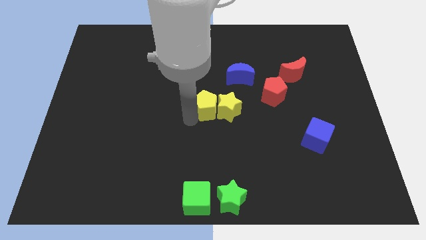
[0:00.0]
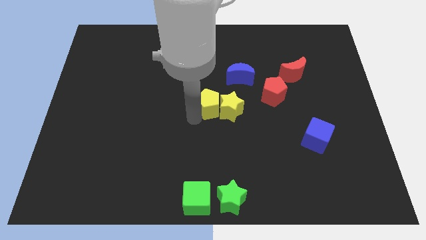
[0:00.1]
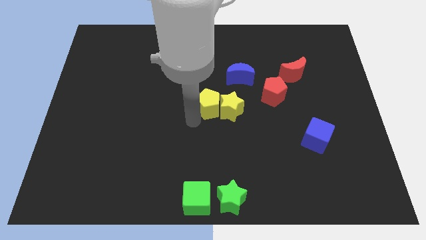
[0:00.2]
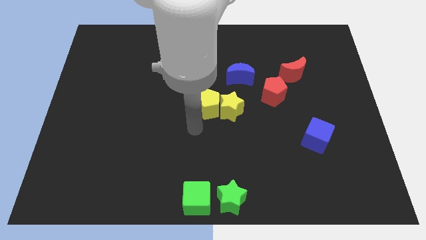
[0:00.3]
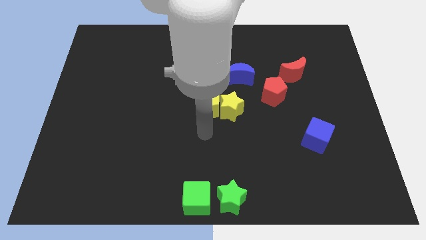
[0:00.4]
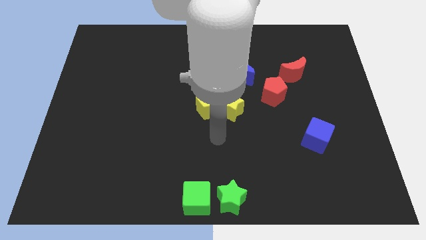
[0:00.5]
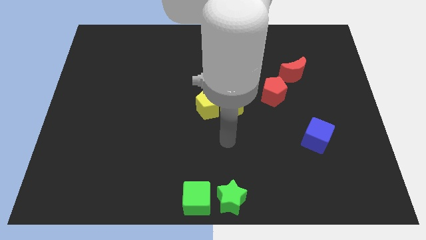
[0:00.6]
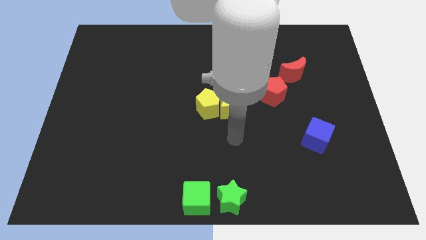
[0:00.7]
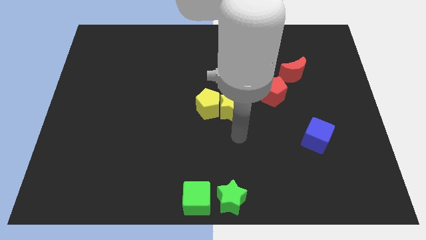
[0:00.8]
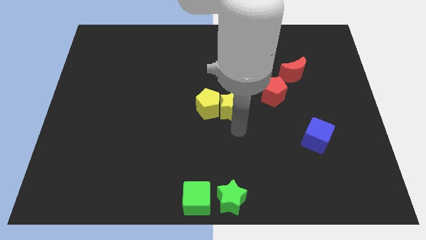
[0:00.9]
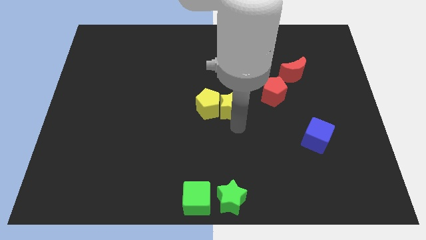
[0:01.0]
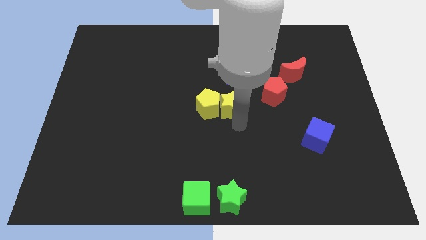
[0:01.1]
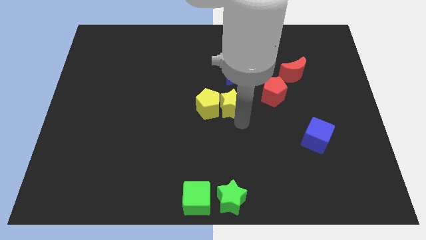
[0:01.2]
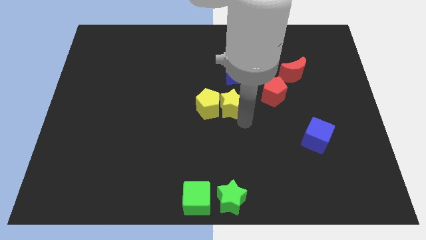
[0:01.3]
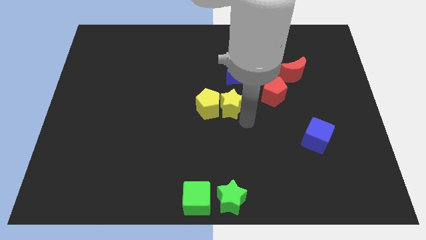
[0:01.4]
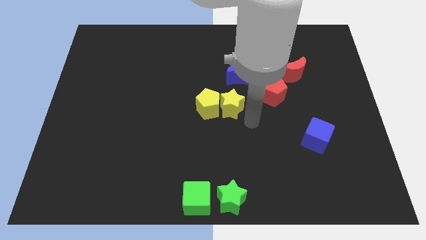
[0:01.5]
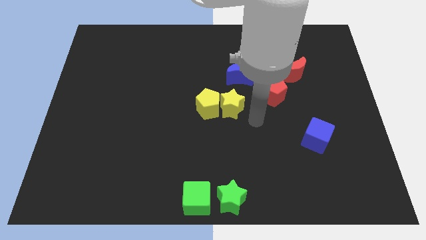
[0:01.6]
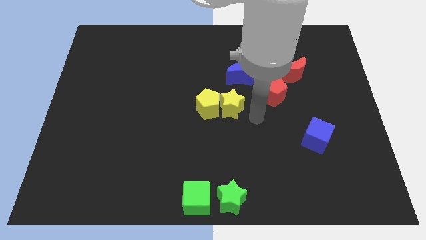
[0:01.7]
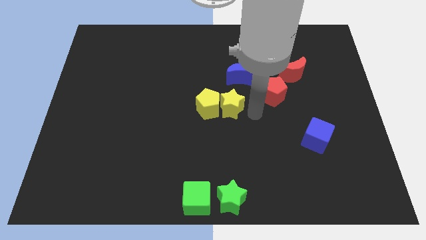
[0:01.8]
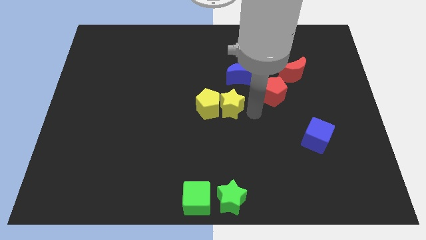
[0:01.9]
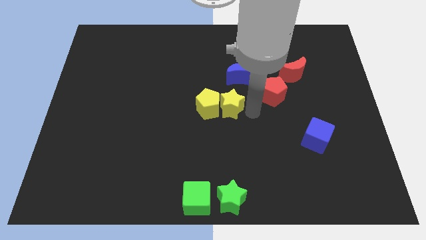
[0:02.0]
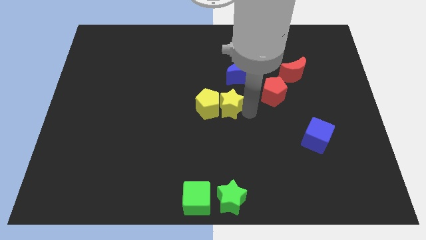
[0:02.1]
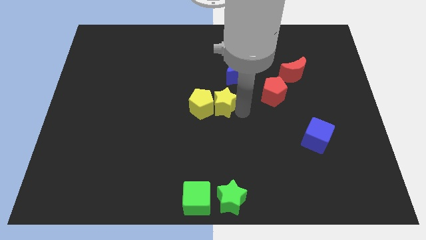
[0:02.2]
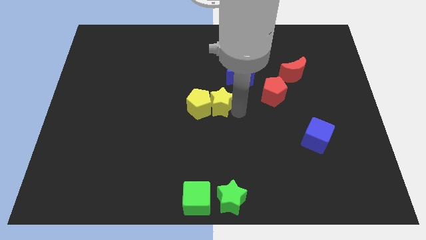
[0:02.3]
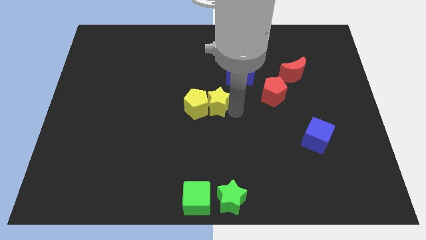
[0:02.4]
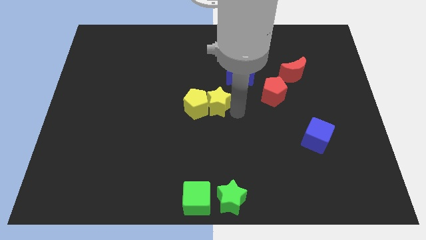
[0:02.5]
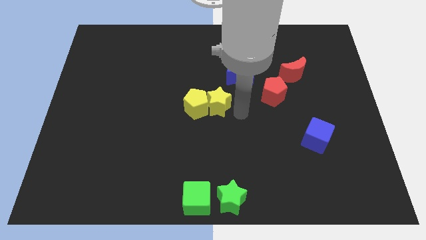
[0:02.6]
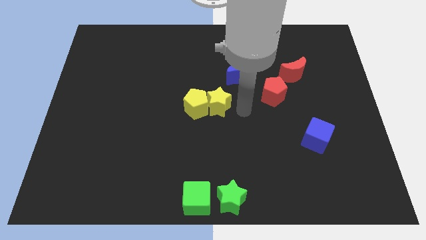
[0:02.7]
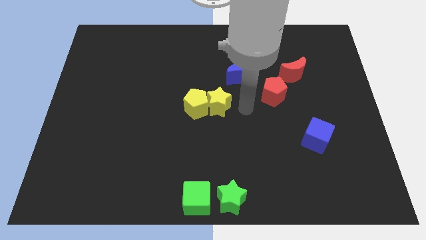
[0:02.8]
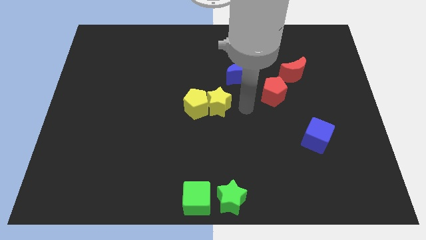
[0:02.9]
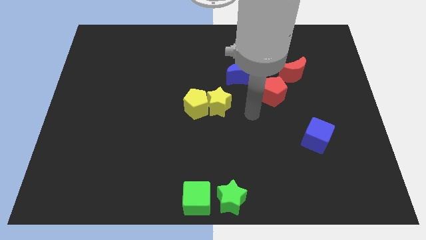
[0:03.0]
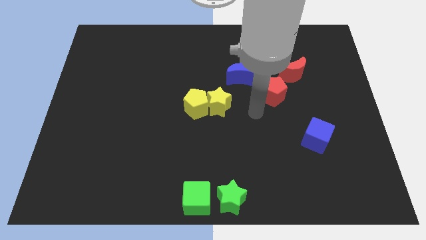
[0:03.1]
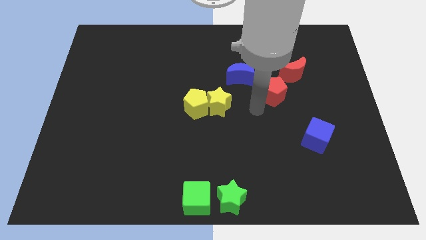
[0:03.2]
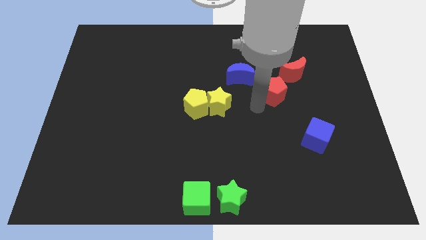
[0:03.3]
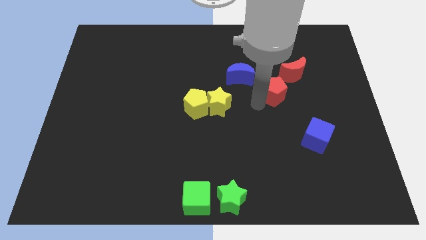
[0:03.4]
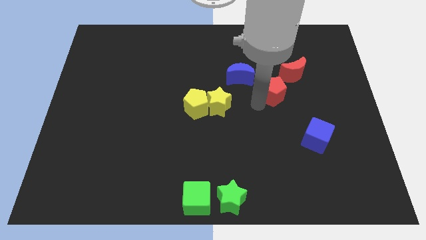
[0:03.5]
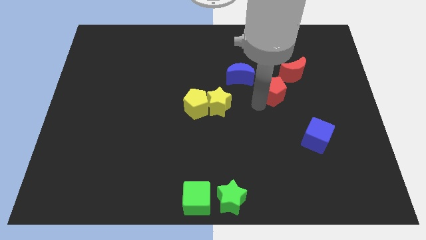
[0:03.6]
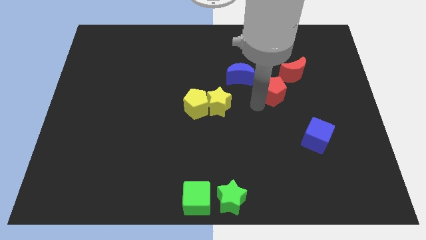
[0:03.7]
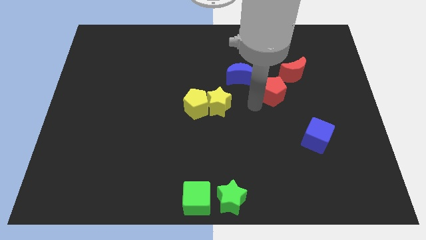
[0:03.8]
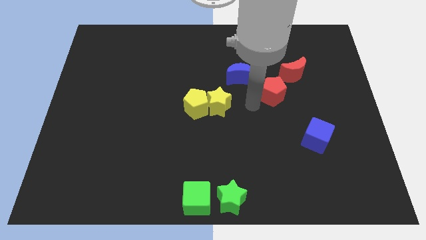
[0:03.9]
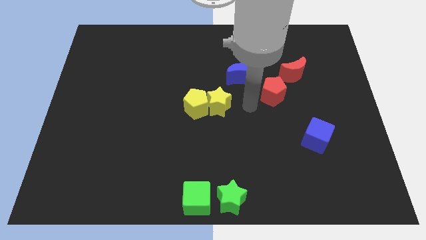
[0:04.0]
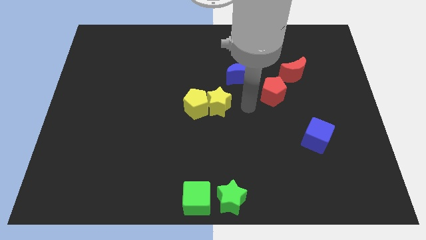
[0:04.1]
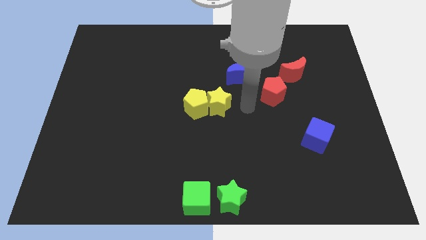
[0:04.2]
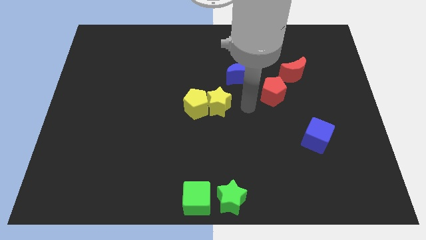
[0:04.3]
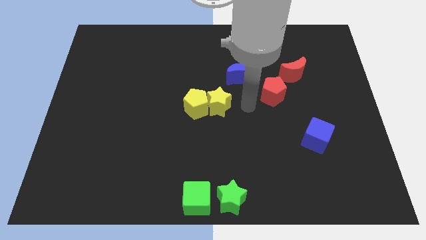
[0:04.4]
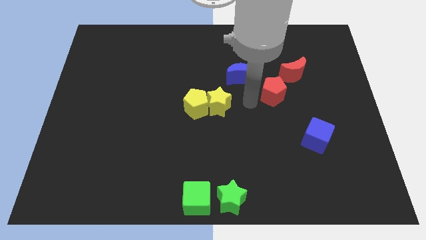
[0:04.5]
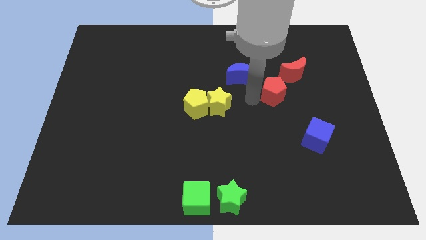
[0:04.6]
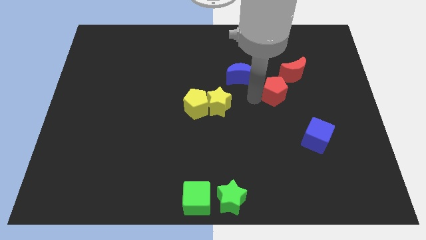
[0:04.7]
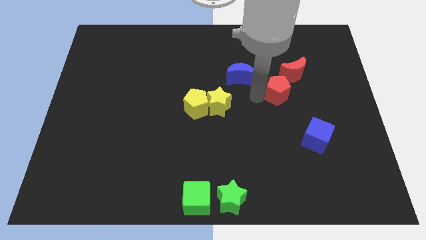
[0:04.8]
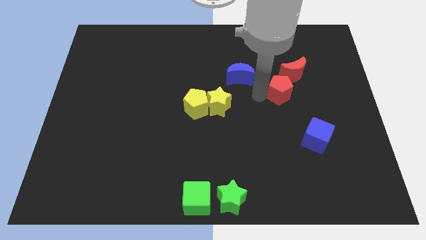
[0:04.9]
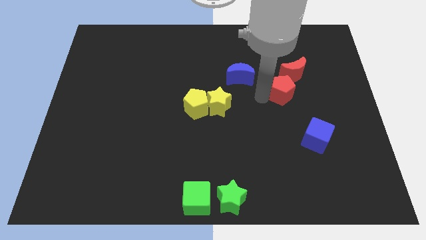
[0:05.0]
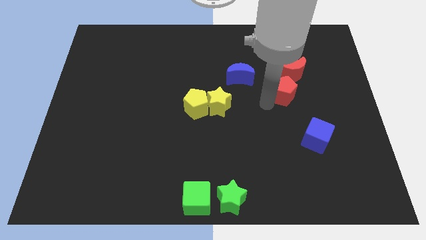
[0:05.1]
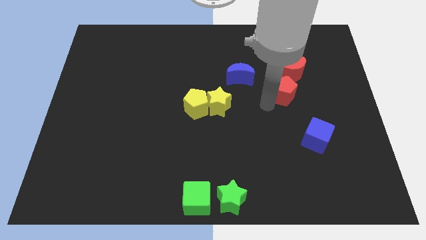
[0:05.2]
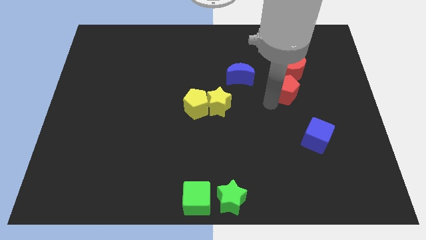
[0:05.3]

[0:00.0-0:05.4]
push red pentagon below red crescent

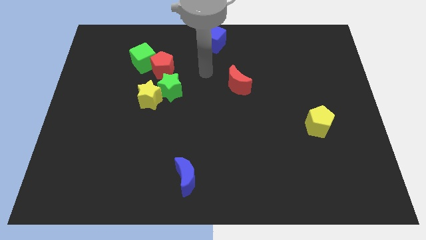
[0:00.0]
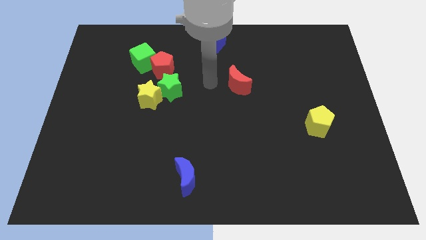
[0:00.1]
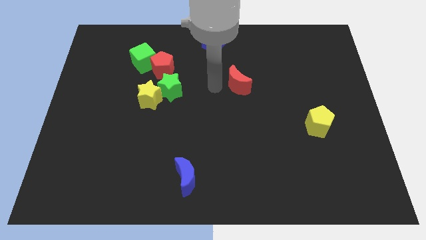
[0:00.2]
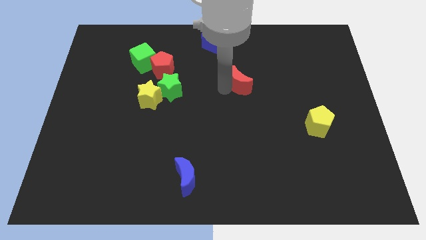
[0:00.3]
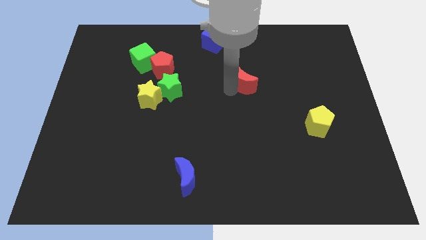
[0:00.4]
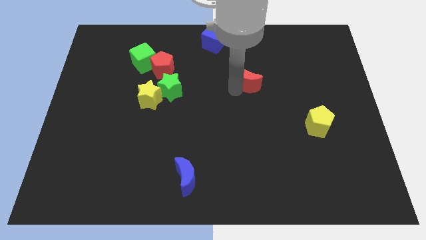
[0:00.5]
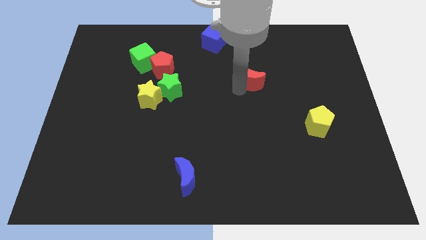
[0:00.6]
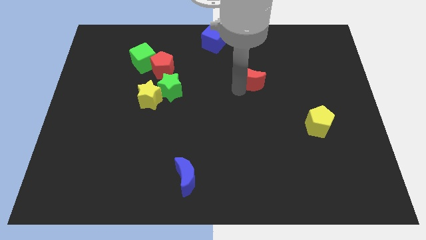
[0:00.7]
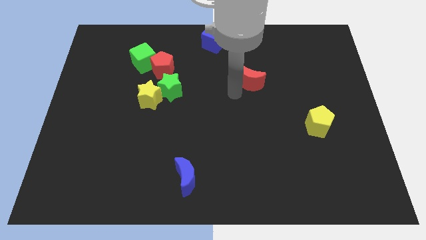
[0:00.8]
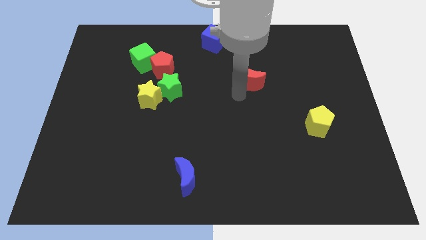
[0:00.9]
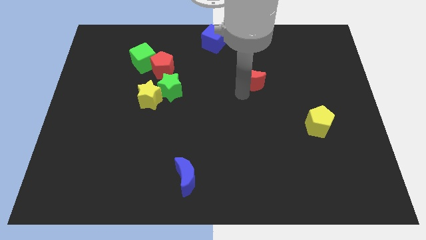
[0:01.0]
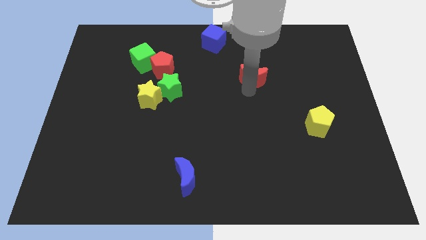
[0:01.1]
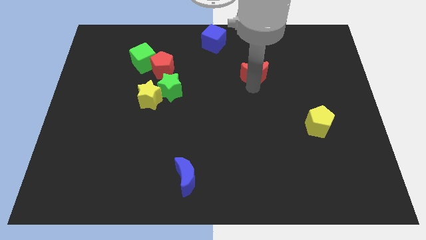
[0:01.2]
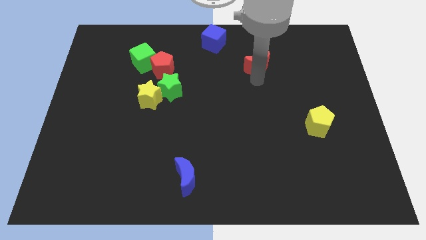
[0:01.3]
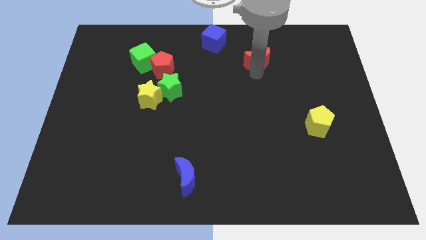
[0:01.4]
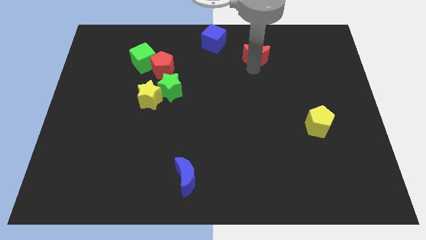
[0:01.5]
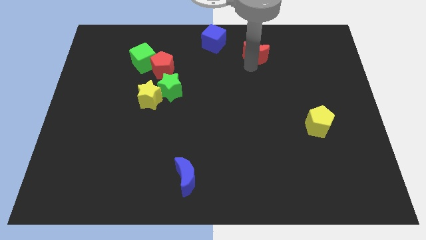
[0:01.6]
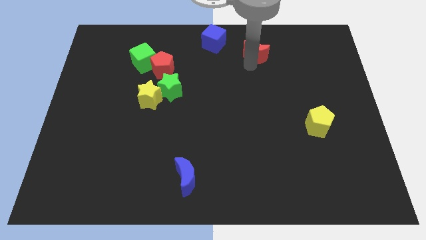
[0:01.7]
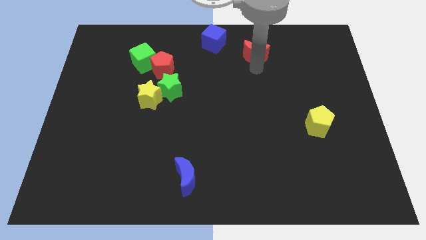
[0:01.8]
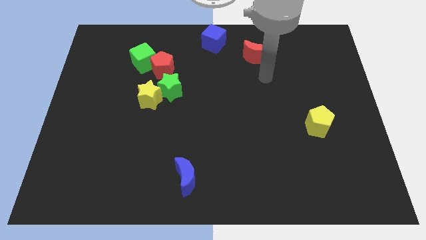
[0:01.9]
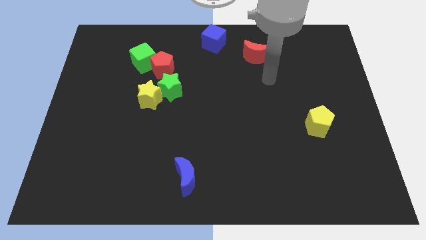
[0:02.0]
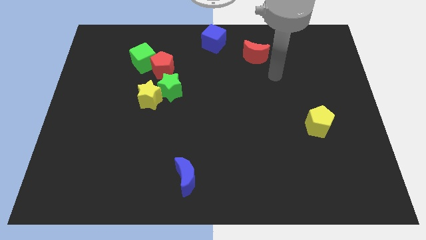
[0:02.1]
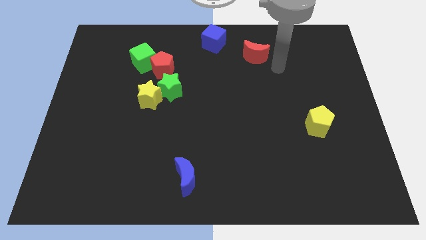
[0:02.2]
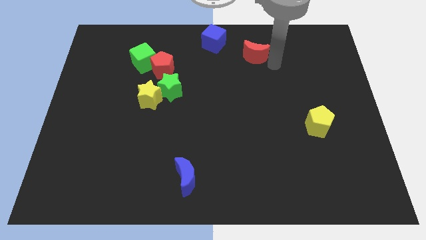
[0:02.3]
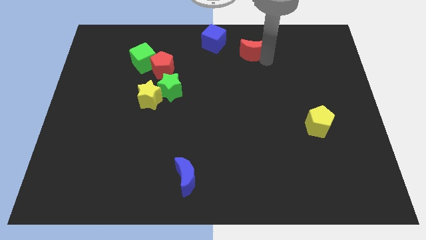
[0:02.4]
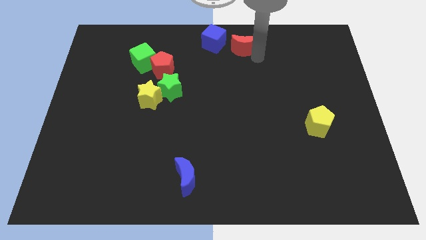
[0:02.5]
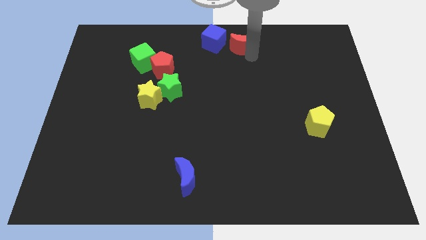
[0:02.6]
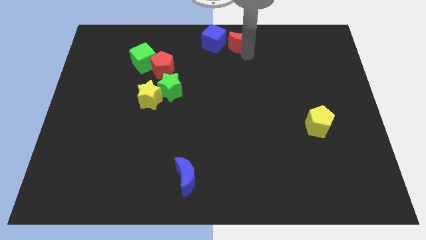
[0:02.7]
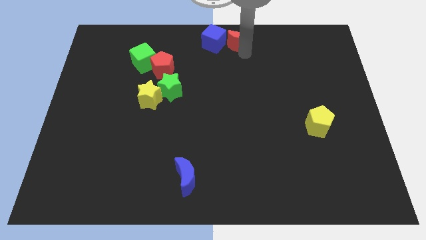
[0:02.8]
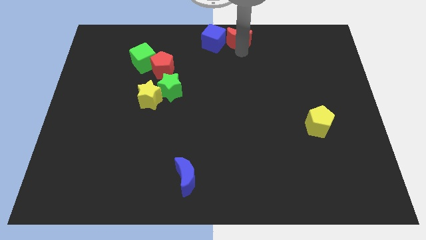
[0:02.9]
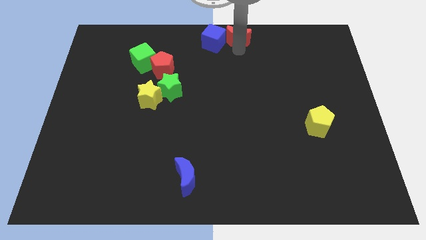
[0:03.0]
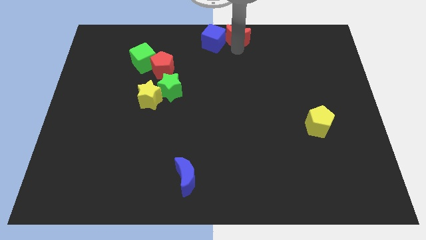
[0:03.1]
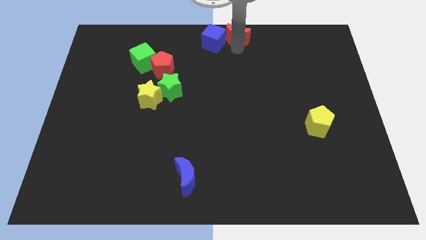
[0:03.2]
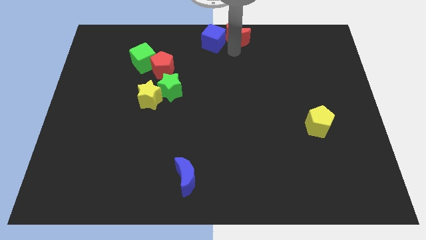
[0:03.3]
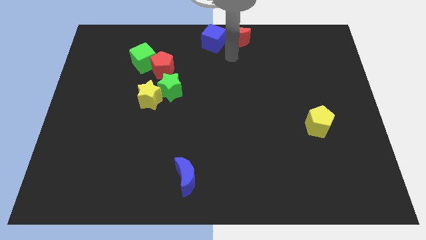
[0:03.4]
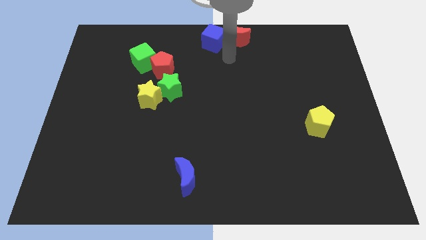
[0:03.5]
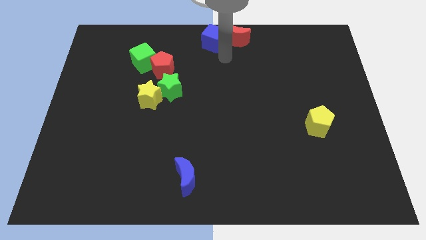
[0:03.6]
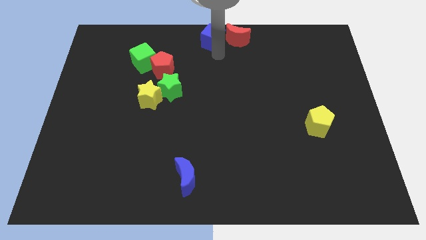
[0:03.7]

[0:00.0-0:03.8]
place red moon to the top center of the board
